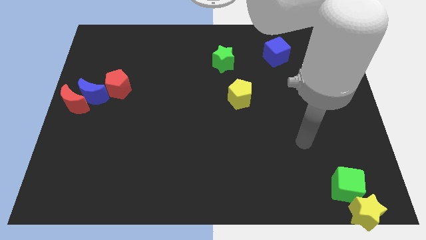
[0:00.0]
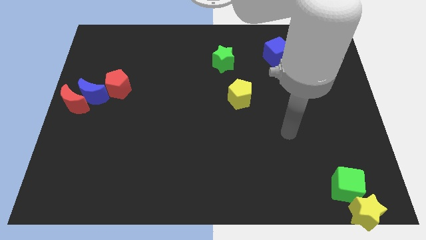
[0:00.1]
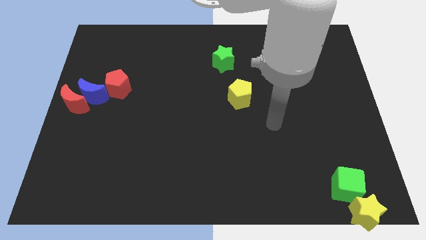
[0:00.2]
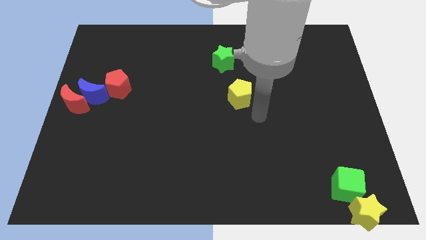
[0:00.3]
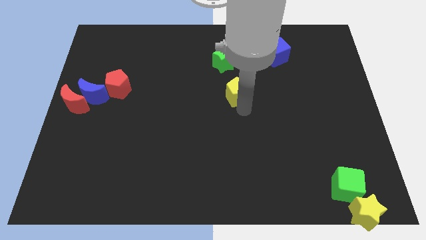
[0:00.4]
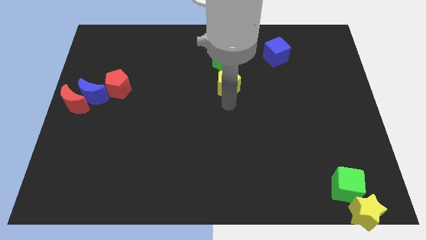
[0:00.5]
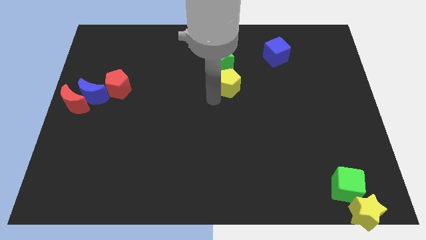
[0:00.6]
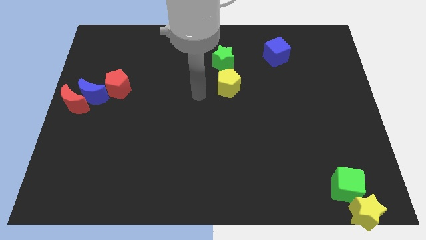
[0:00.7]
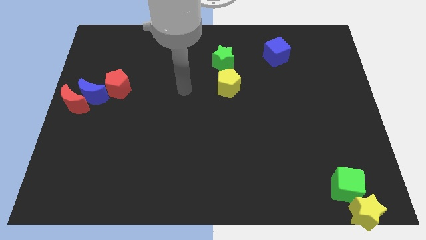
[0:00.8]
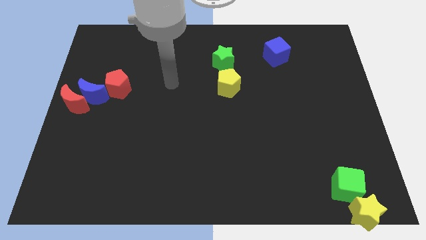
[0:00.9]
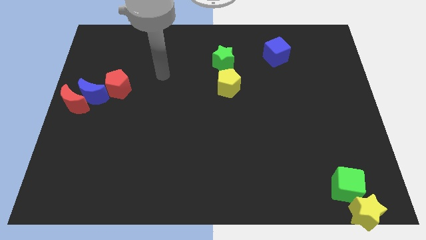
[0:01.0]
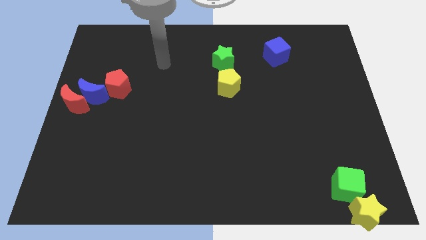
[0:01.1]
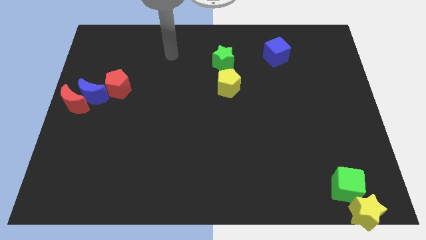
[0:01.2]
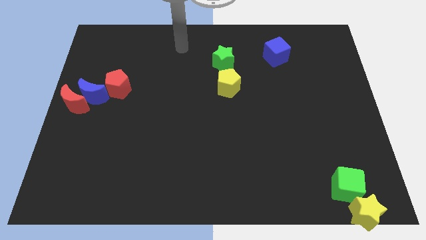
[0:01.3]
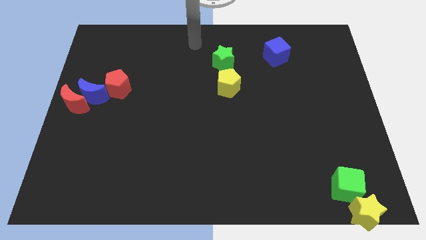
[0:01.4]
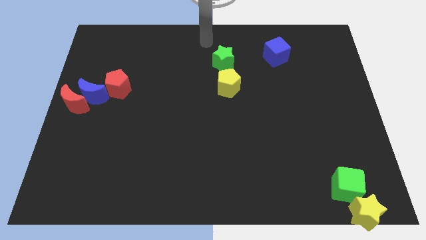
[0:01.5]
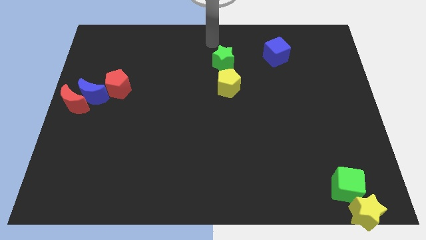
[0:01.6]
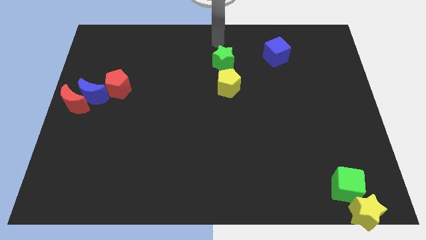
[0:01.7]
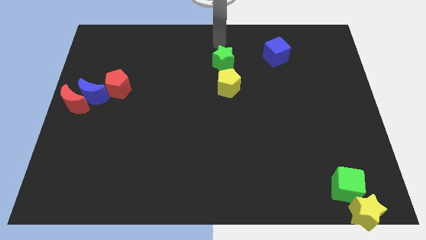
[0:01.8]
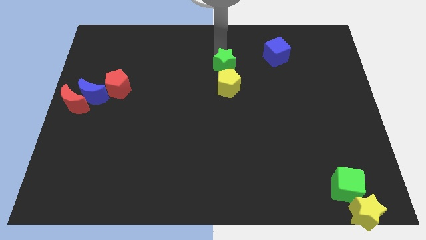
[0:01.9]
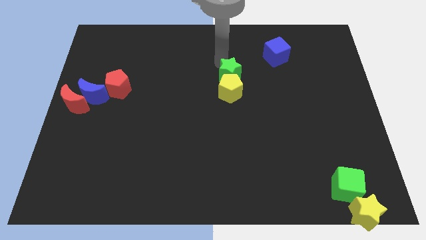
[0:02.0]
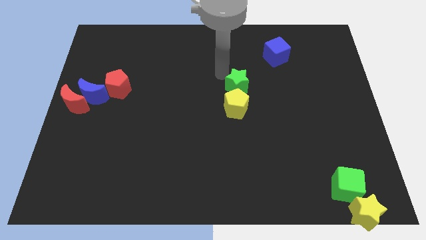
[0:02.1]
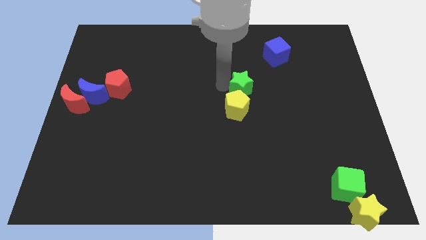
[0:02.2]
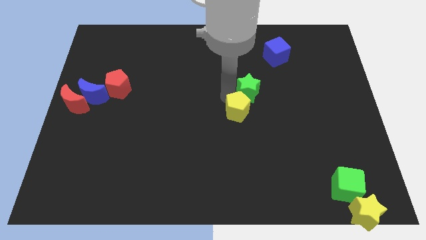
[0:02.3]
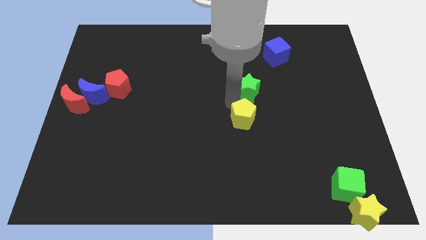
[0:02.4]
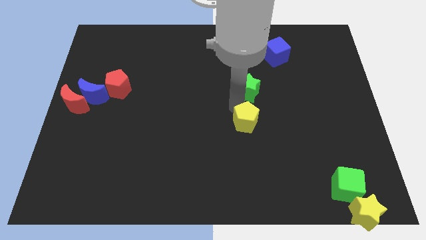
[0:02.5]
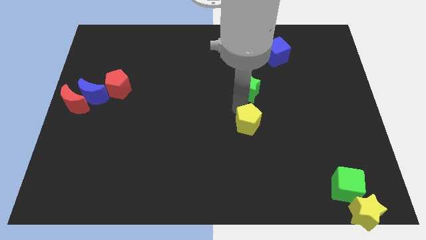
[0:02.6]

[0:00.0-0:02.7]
move your arm away from the green cube

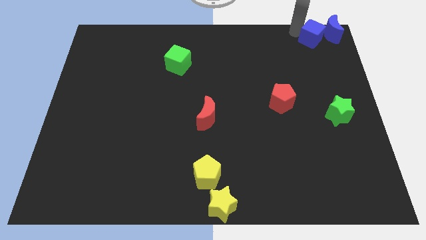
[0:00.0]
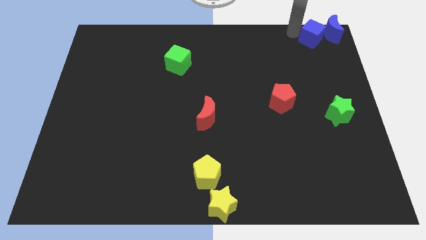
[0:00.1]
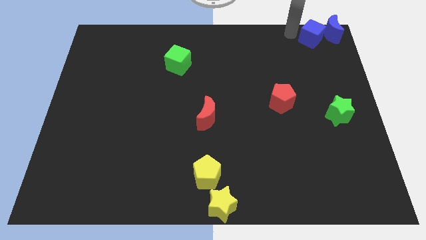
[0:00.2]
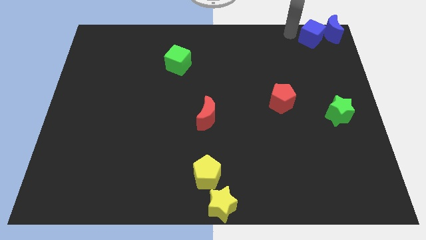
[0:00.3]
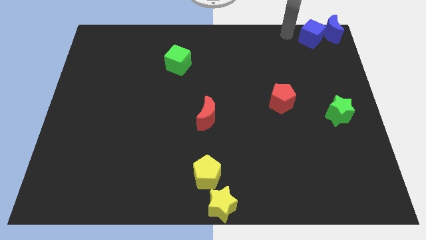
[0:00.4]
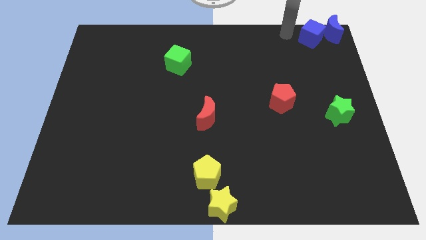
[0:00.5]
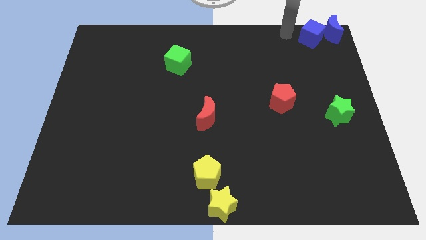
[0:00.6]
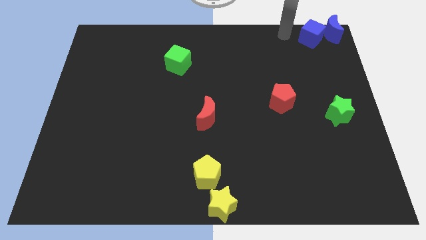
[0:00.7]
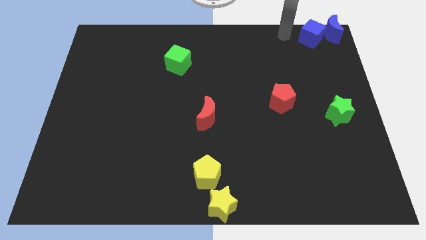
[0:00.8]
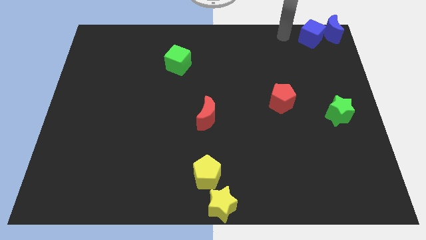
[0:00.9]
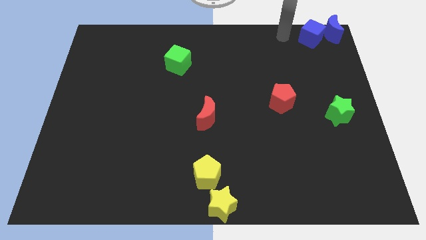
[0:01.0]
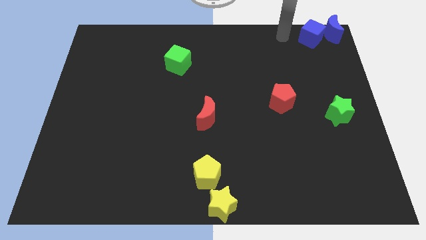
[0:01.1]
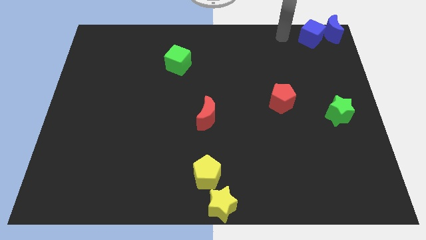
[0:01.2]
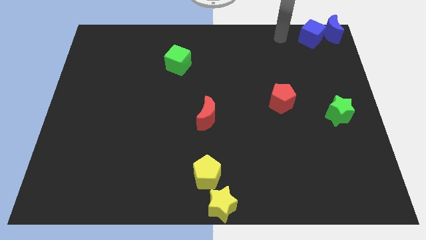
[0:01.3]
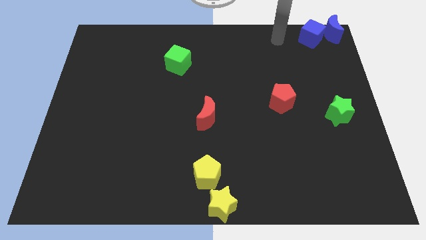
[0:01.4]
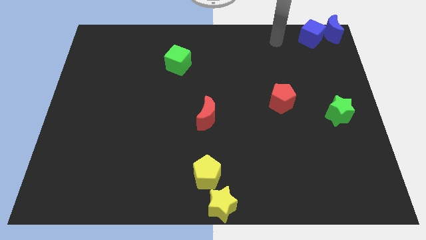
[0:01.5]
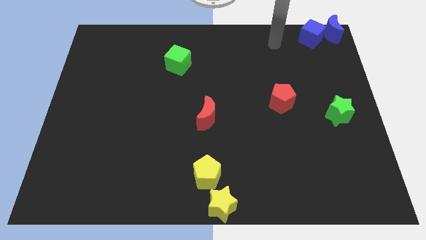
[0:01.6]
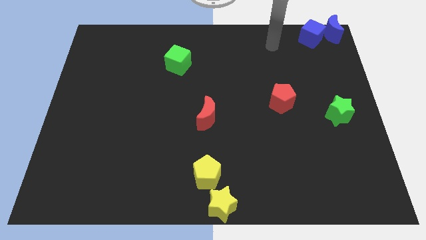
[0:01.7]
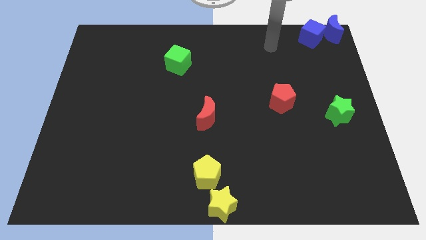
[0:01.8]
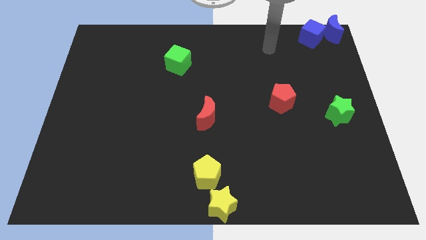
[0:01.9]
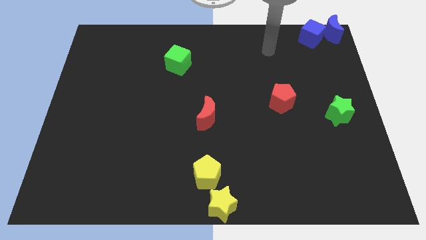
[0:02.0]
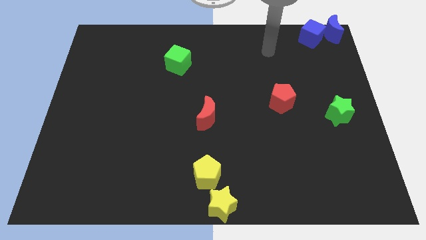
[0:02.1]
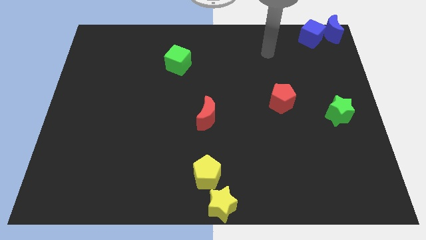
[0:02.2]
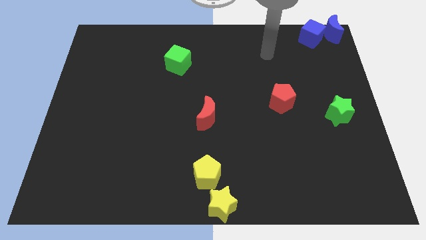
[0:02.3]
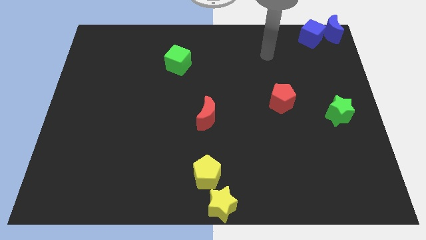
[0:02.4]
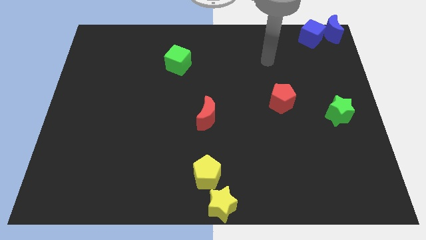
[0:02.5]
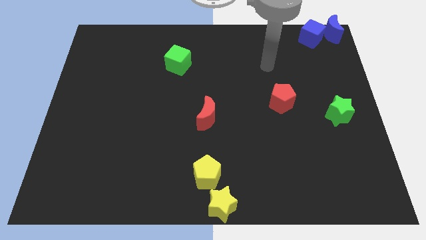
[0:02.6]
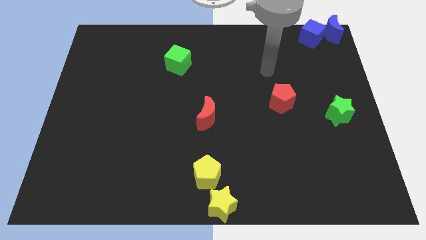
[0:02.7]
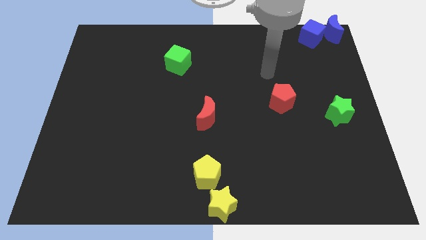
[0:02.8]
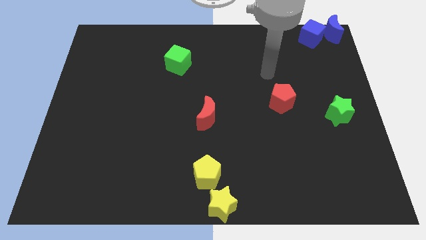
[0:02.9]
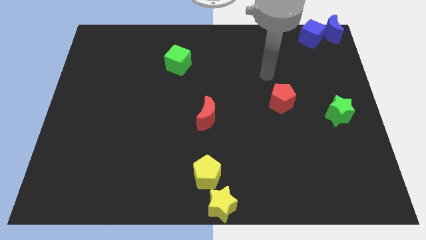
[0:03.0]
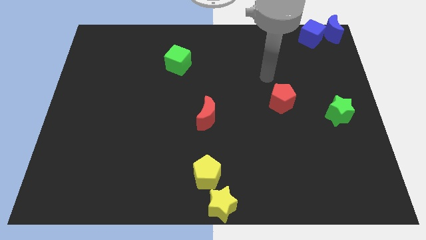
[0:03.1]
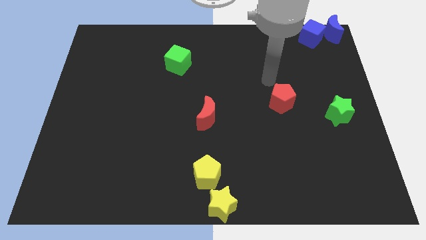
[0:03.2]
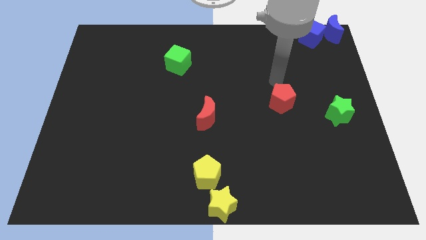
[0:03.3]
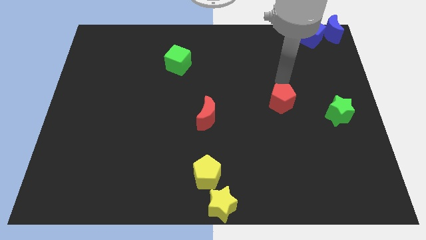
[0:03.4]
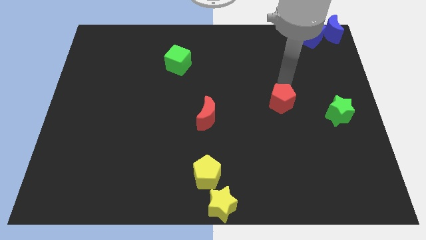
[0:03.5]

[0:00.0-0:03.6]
move your arm away from the blue cube

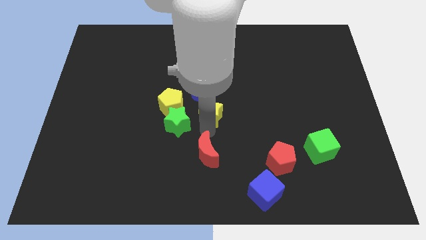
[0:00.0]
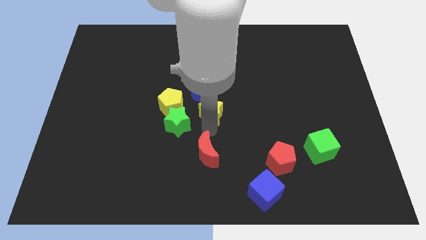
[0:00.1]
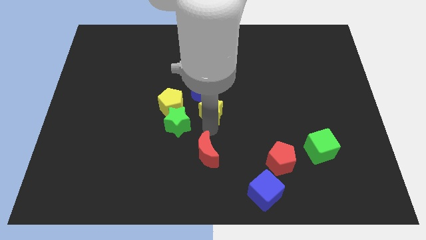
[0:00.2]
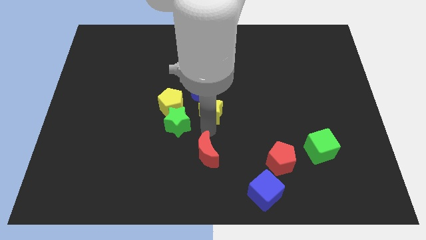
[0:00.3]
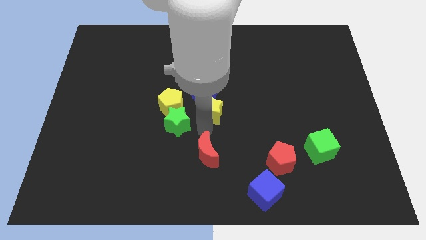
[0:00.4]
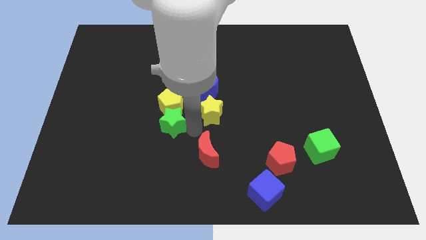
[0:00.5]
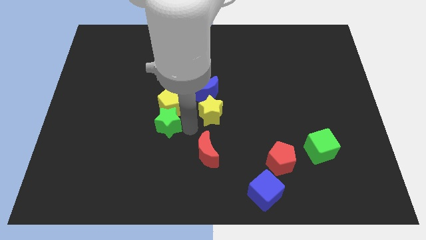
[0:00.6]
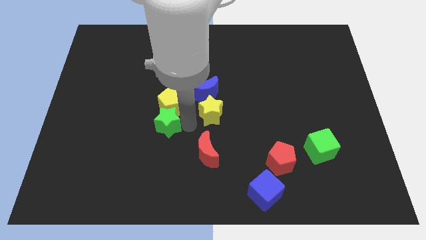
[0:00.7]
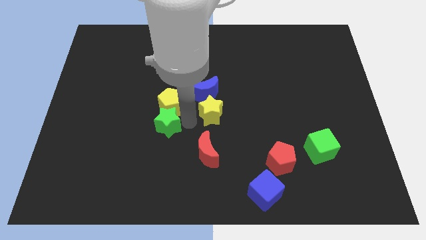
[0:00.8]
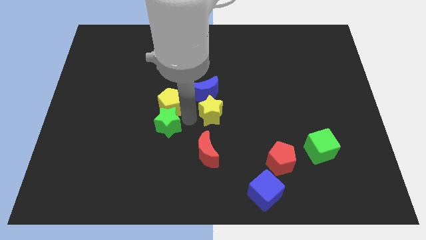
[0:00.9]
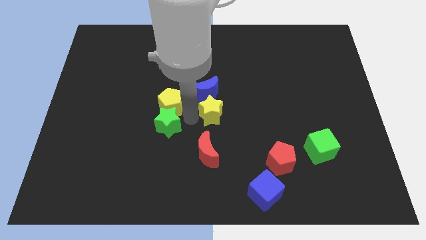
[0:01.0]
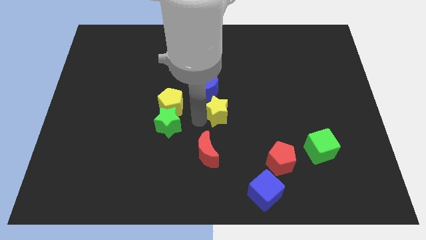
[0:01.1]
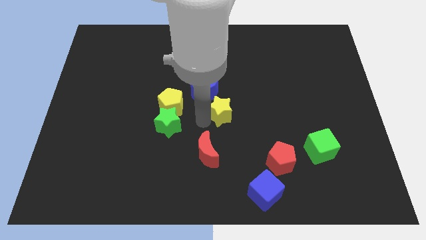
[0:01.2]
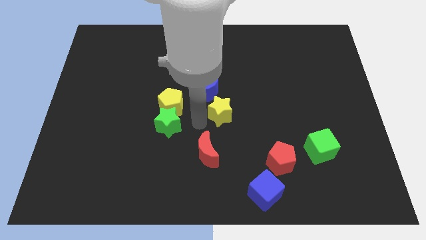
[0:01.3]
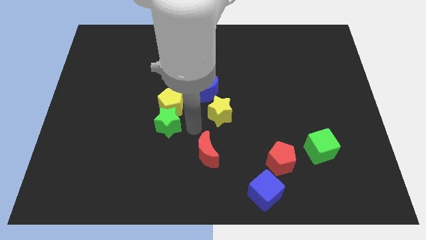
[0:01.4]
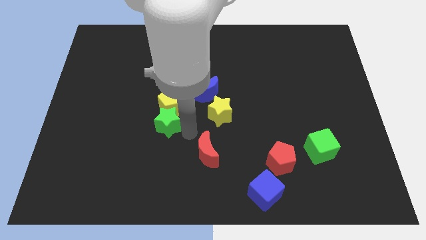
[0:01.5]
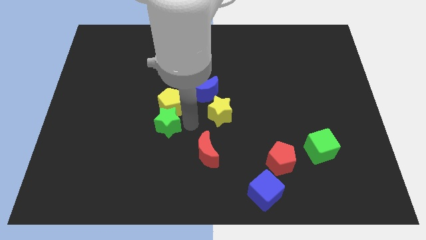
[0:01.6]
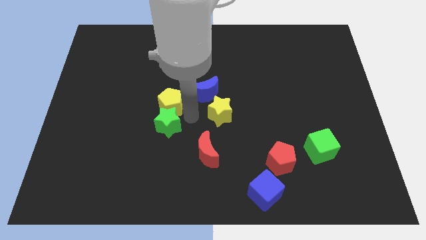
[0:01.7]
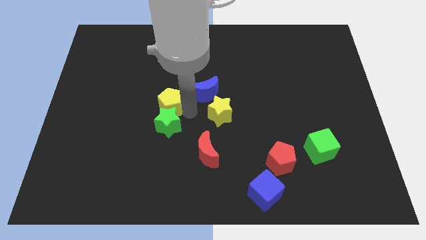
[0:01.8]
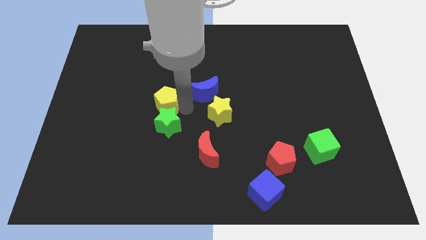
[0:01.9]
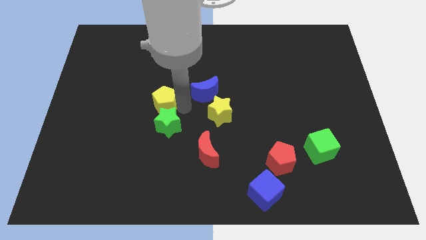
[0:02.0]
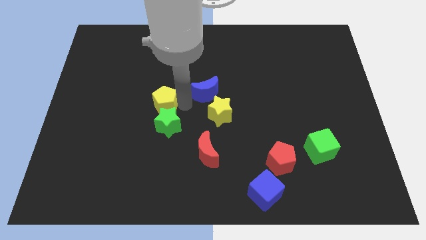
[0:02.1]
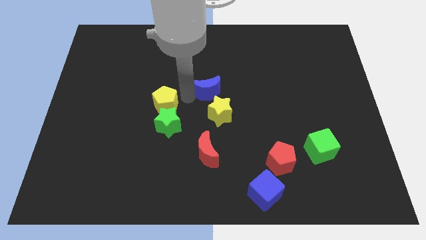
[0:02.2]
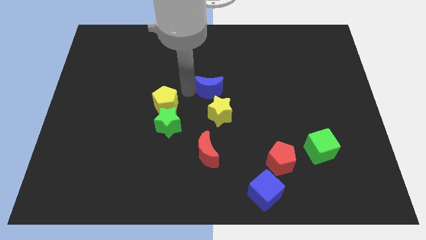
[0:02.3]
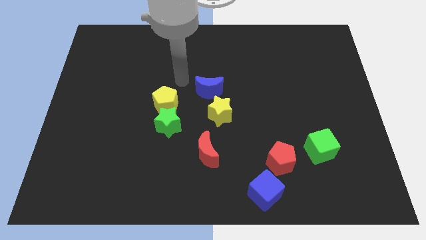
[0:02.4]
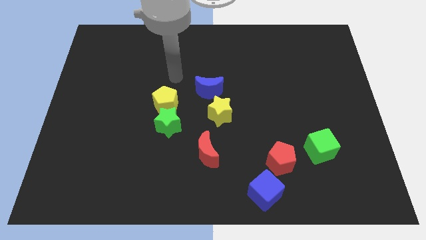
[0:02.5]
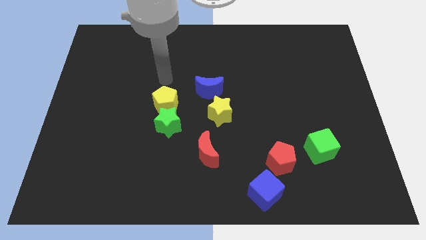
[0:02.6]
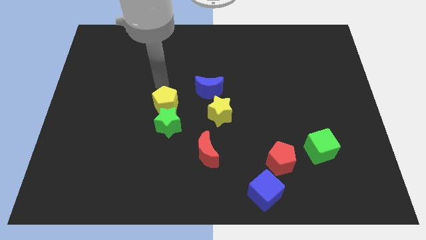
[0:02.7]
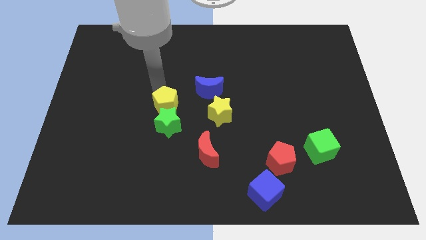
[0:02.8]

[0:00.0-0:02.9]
slightly move the yellow pentagon up
